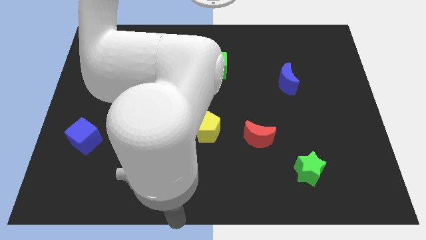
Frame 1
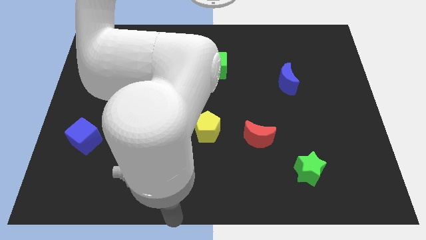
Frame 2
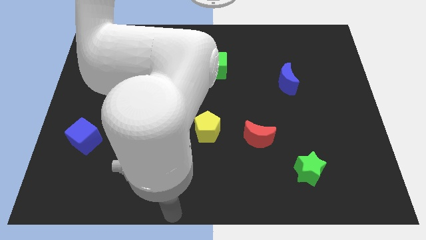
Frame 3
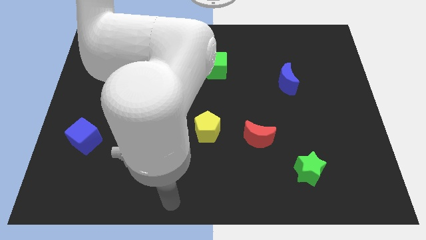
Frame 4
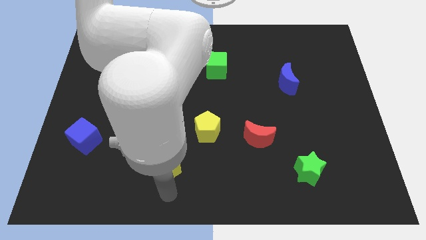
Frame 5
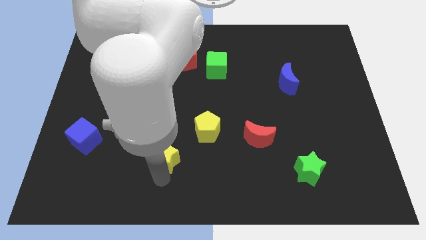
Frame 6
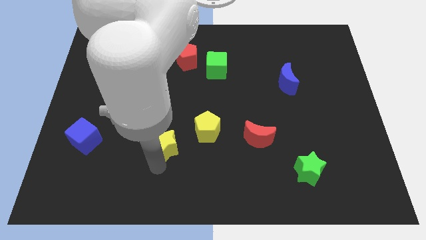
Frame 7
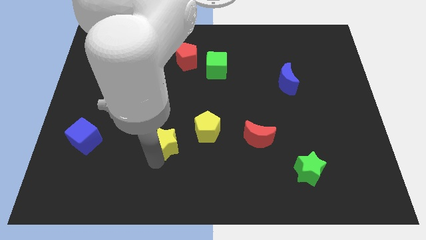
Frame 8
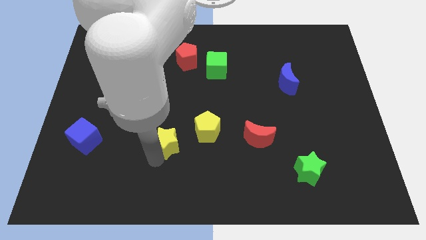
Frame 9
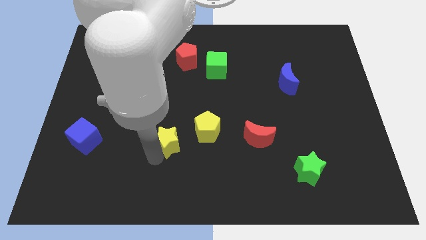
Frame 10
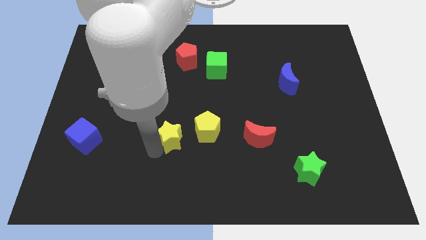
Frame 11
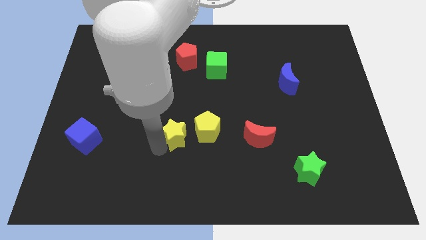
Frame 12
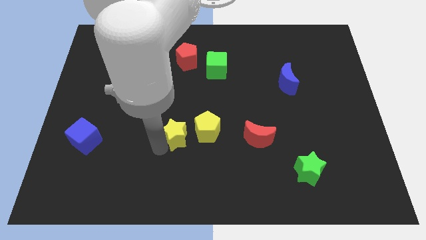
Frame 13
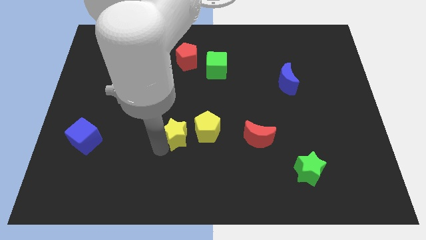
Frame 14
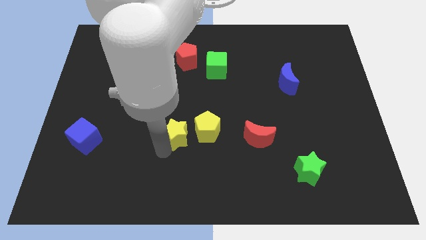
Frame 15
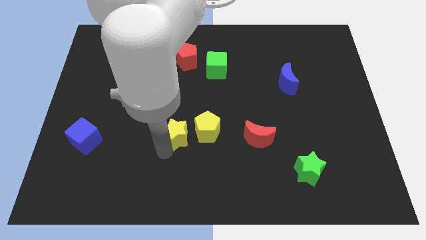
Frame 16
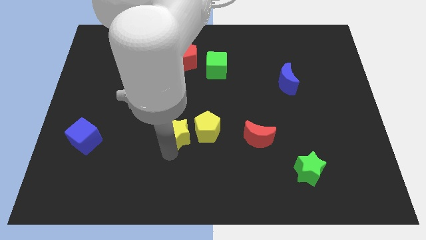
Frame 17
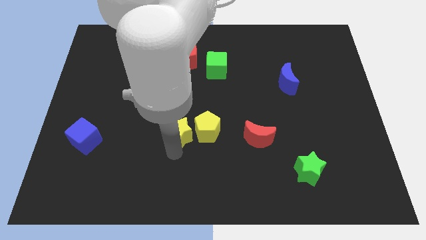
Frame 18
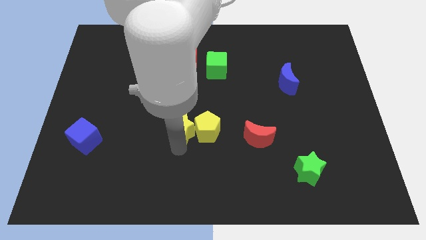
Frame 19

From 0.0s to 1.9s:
slide the yellow star to the left side of the yellow pentagon

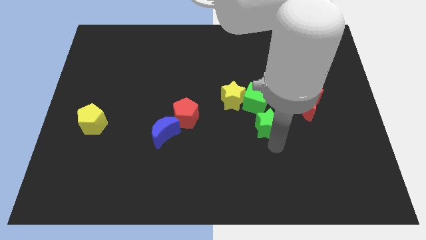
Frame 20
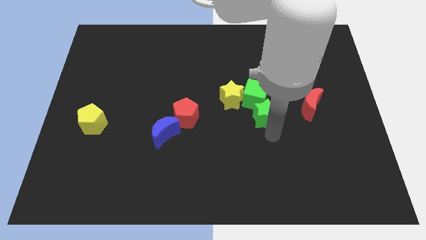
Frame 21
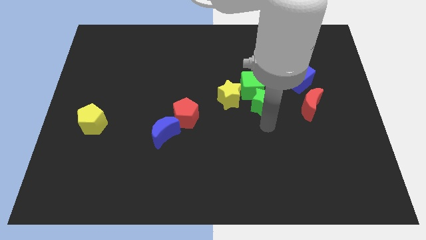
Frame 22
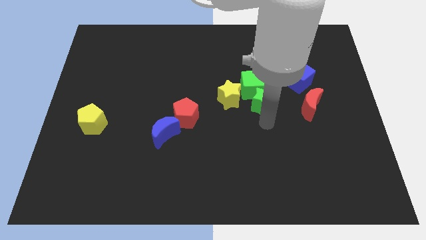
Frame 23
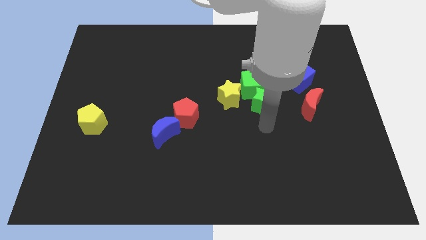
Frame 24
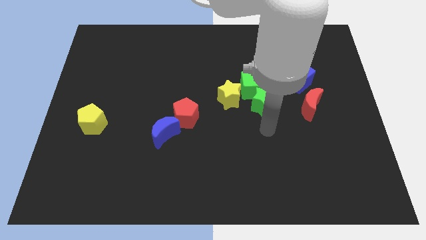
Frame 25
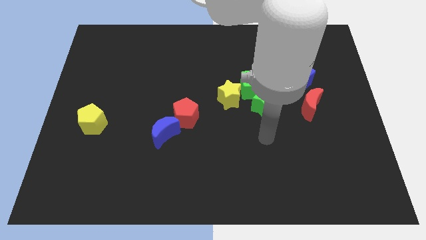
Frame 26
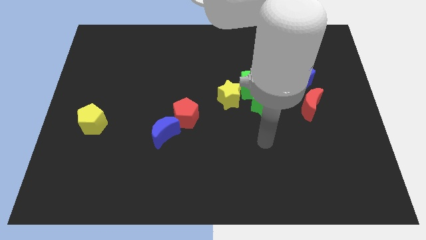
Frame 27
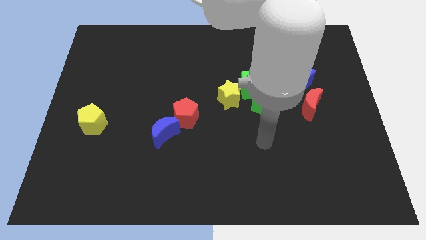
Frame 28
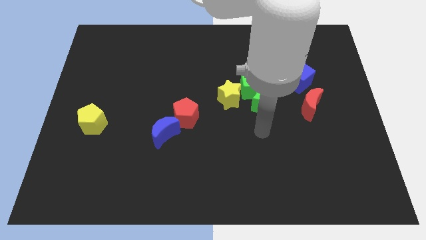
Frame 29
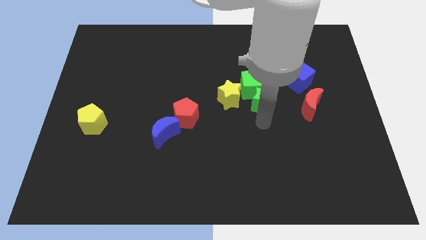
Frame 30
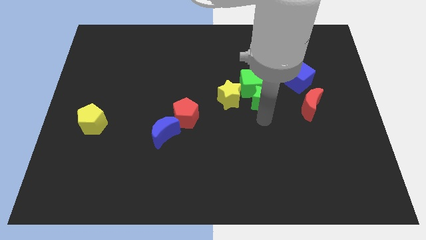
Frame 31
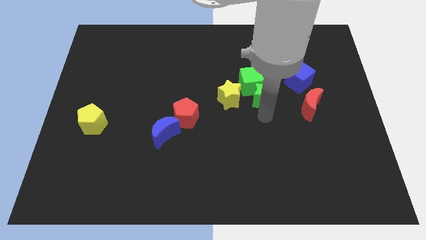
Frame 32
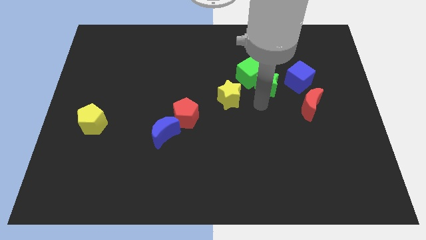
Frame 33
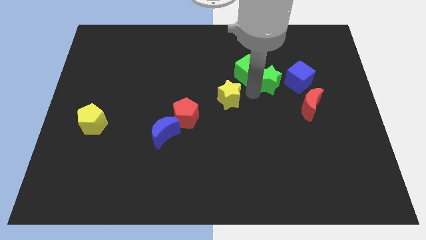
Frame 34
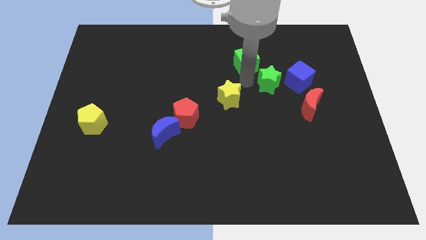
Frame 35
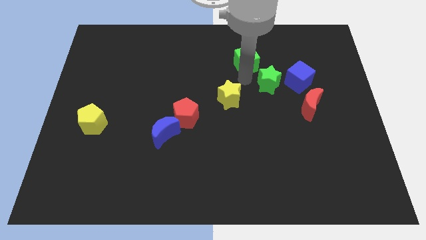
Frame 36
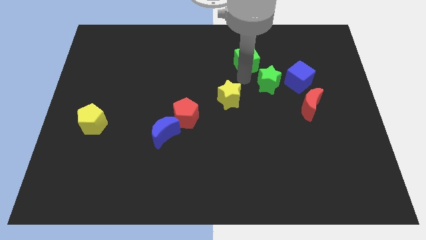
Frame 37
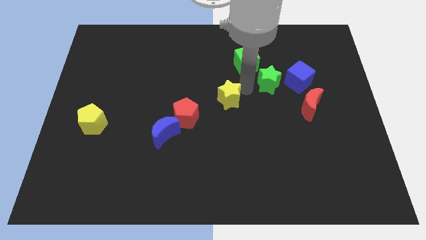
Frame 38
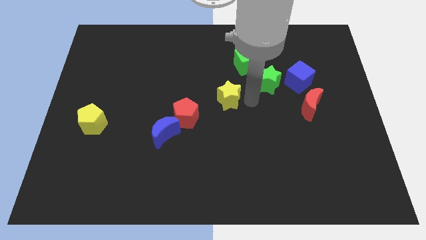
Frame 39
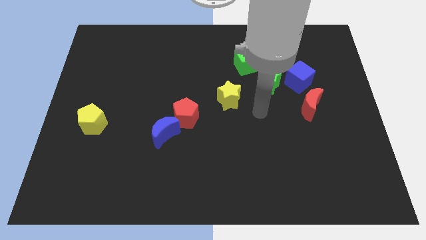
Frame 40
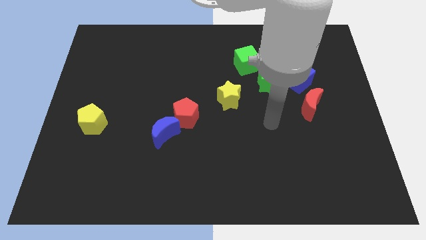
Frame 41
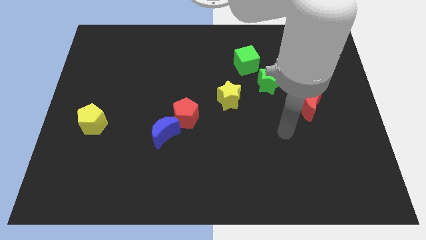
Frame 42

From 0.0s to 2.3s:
push the green cube with green star

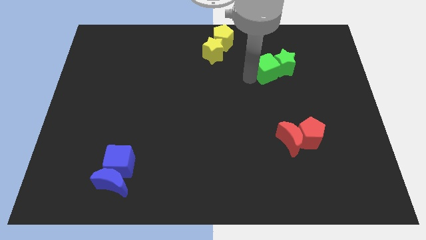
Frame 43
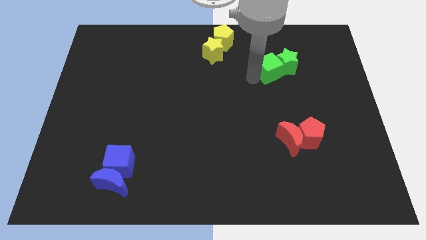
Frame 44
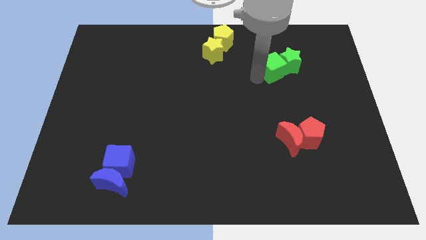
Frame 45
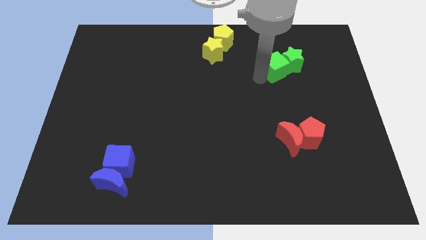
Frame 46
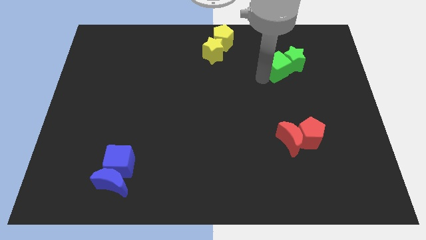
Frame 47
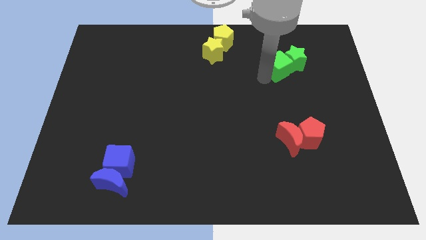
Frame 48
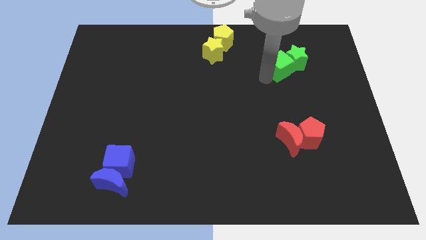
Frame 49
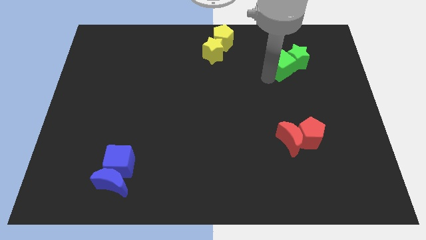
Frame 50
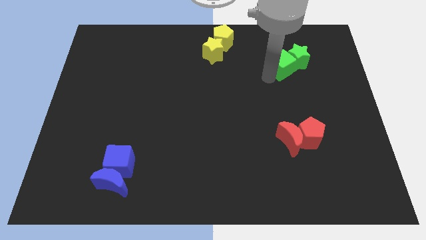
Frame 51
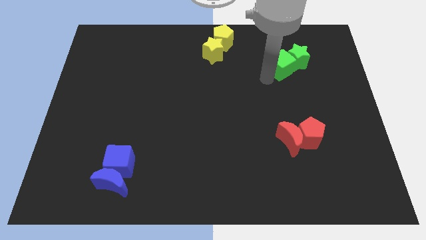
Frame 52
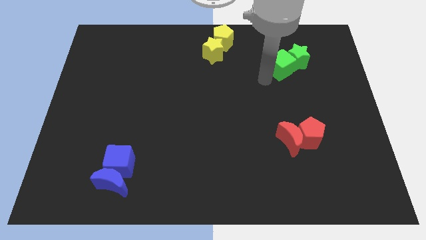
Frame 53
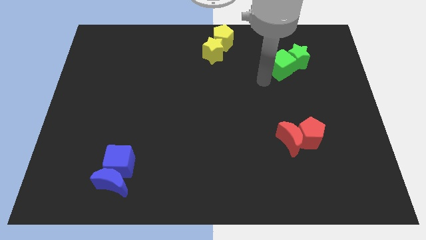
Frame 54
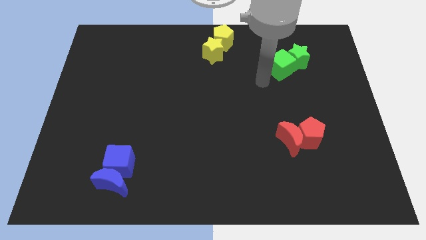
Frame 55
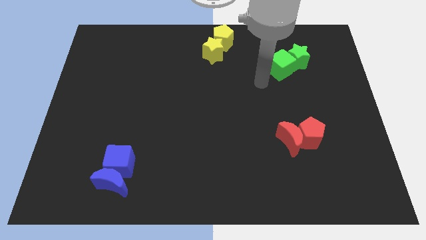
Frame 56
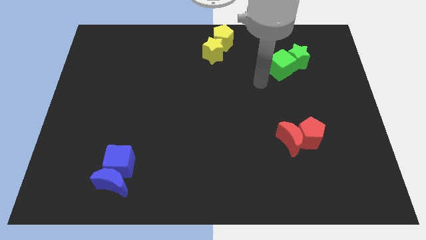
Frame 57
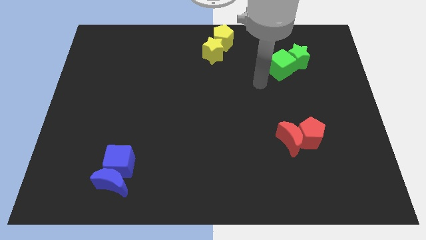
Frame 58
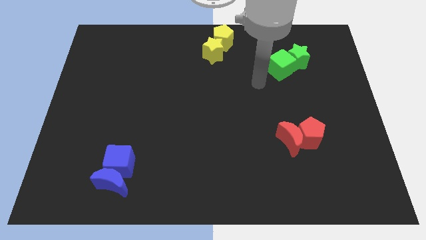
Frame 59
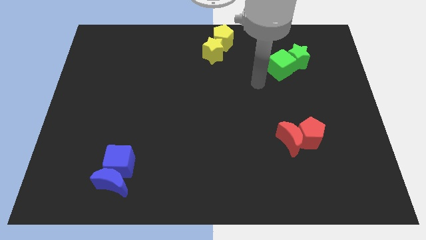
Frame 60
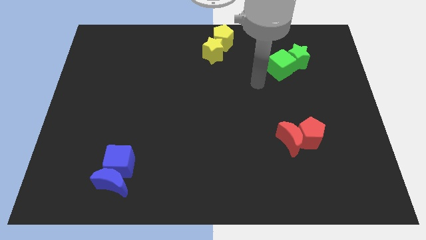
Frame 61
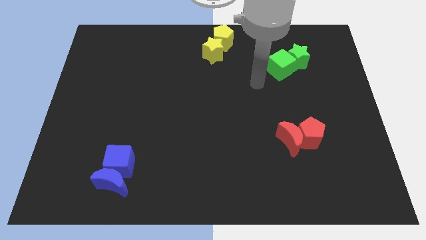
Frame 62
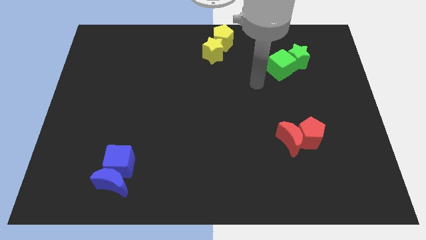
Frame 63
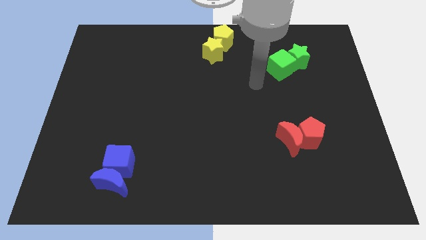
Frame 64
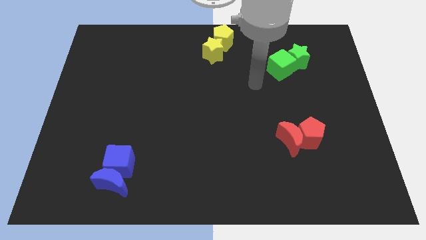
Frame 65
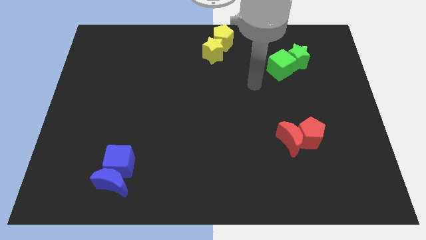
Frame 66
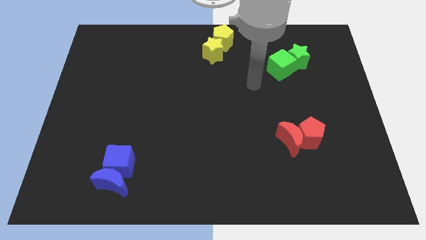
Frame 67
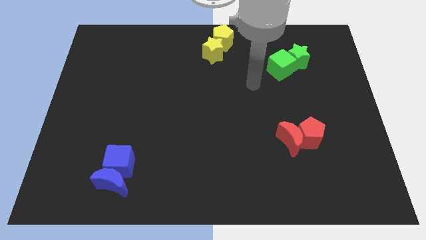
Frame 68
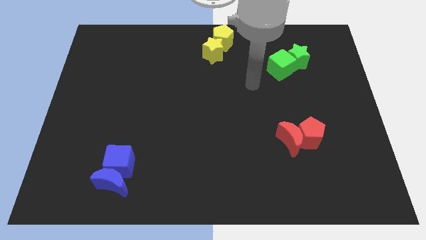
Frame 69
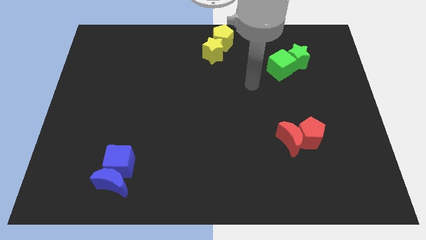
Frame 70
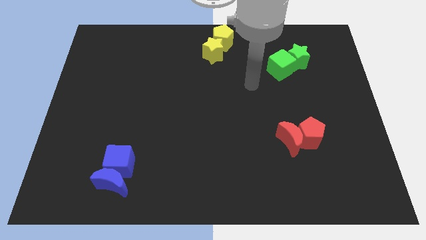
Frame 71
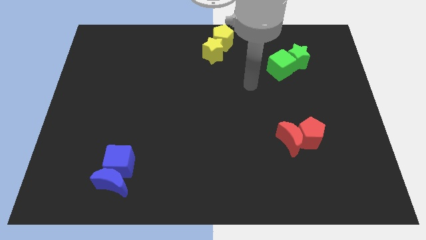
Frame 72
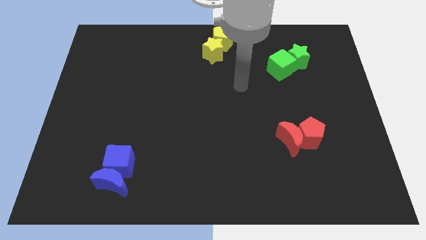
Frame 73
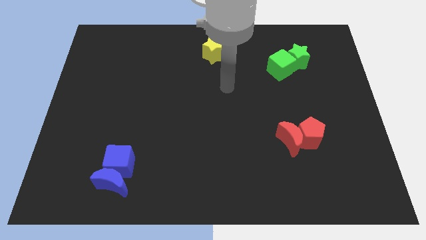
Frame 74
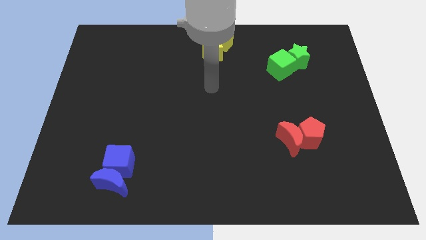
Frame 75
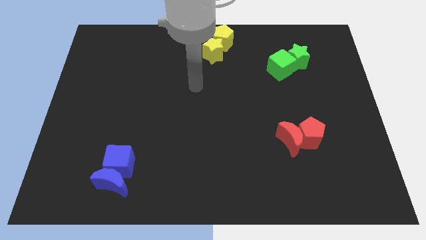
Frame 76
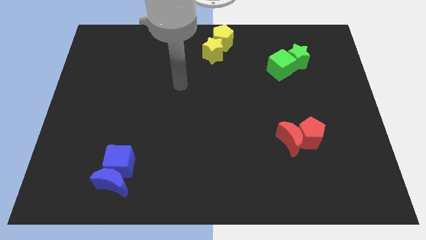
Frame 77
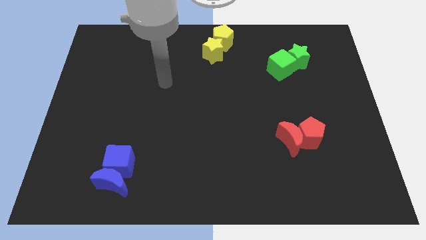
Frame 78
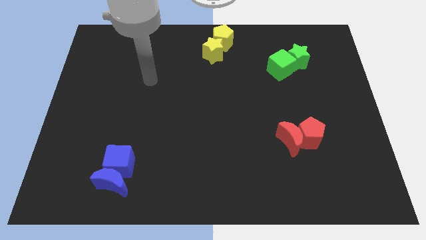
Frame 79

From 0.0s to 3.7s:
place the arm diagonally to the blue cube

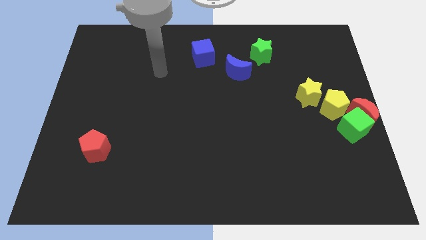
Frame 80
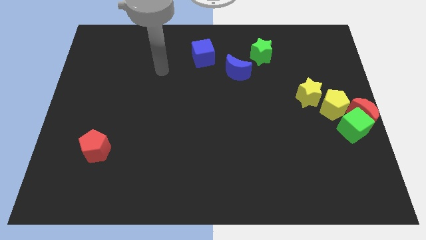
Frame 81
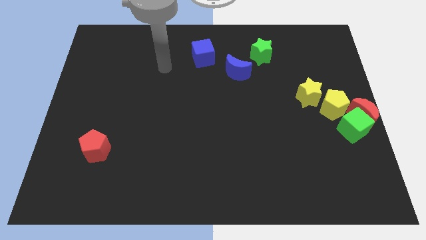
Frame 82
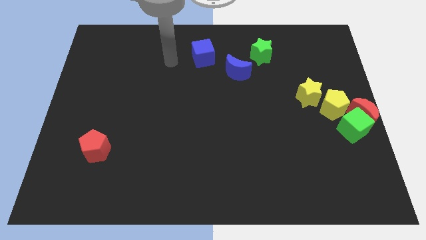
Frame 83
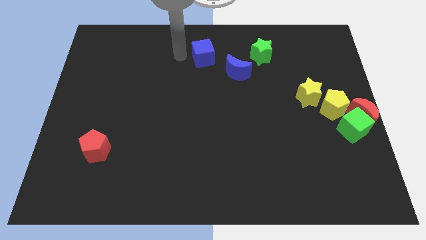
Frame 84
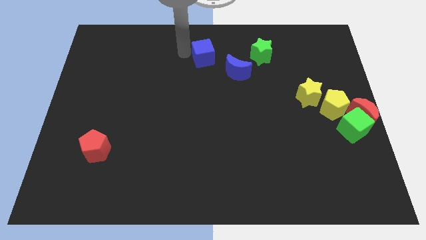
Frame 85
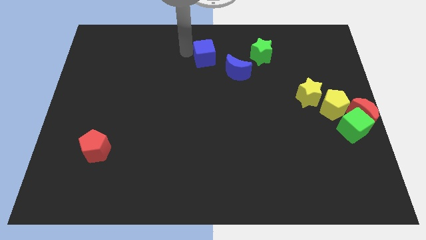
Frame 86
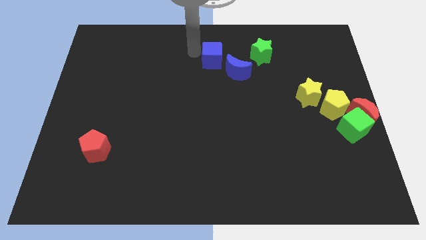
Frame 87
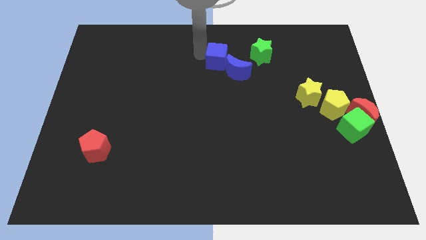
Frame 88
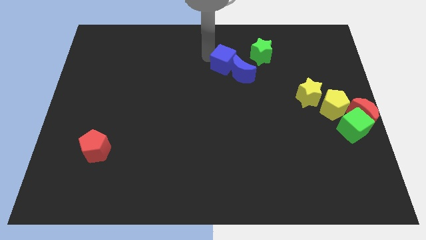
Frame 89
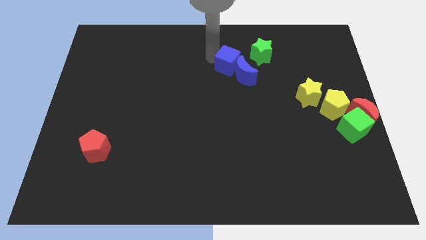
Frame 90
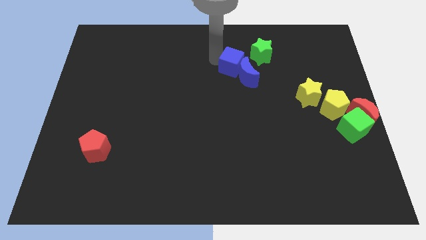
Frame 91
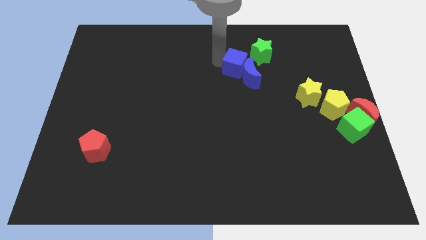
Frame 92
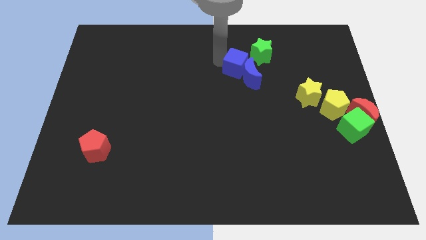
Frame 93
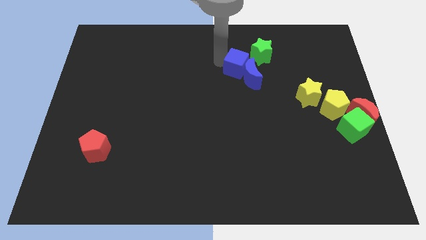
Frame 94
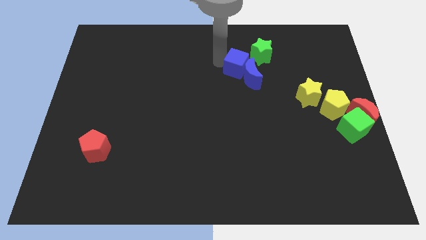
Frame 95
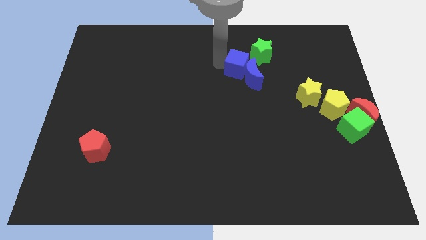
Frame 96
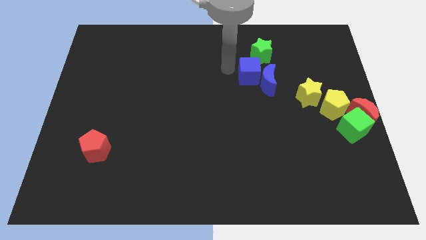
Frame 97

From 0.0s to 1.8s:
move the blue cube into the blue crescent
